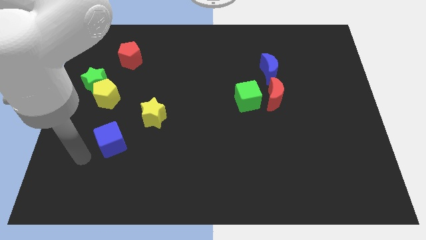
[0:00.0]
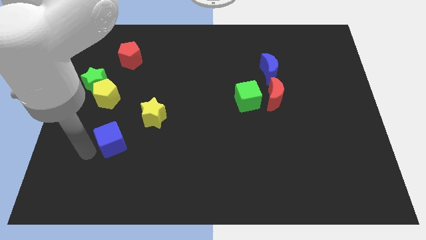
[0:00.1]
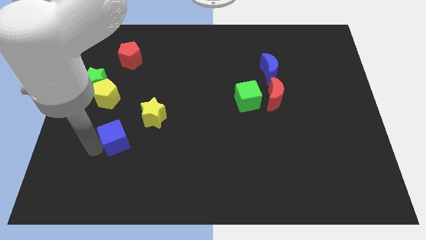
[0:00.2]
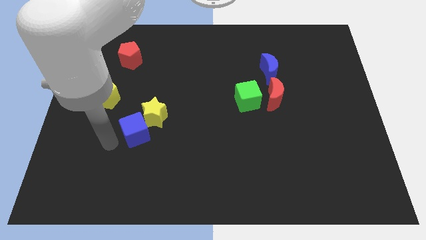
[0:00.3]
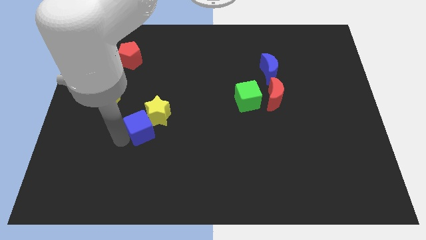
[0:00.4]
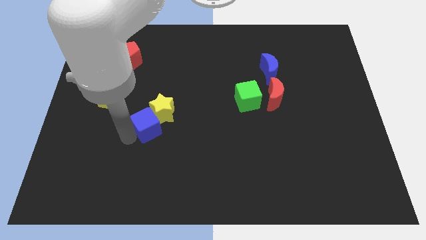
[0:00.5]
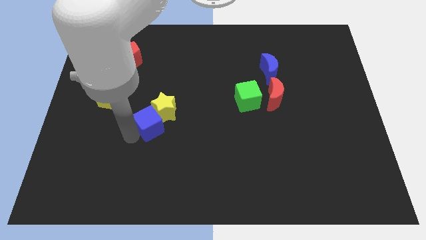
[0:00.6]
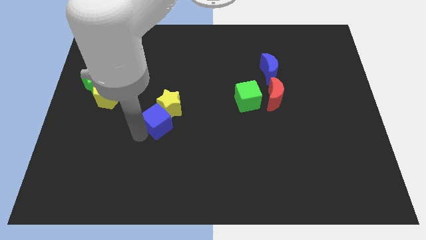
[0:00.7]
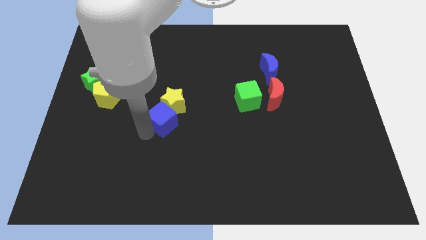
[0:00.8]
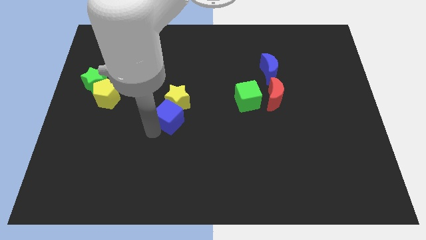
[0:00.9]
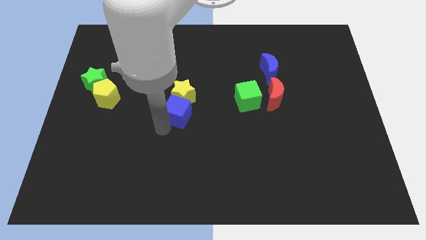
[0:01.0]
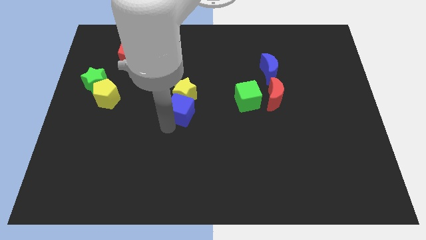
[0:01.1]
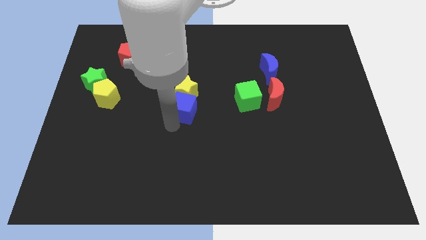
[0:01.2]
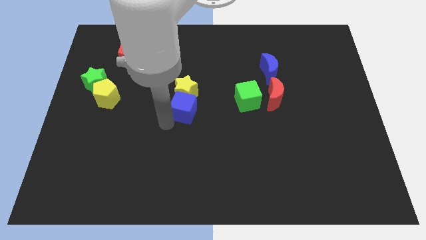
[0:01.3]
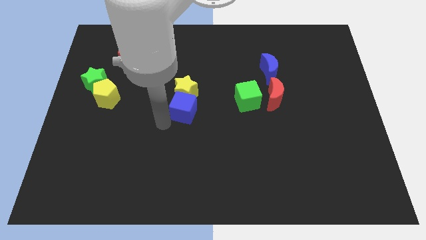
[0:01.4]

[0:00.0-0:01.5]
move the blue cube along with the yellow star to the left of the green cube

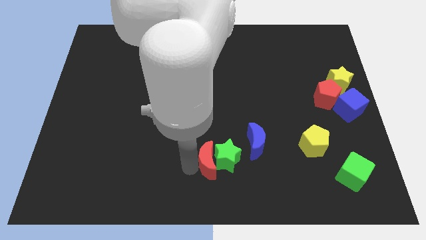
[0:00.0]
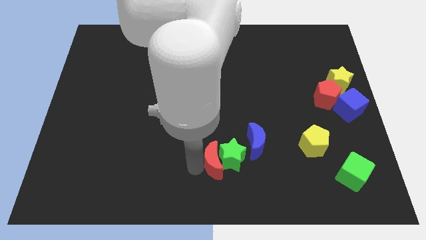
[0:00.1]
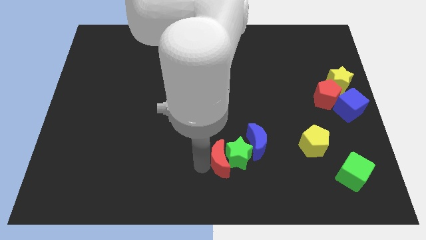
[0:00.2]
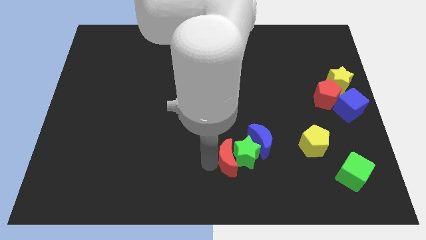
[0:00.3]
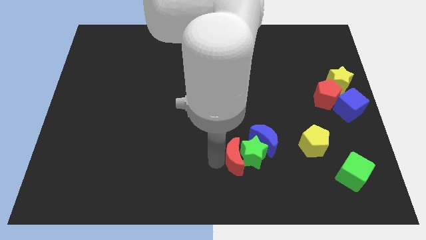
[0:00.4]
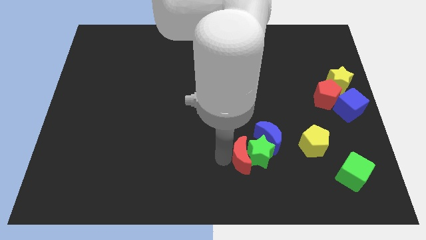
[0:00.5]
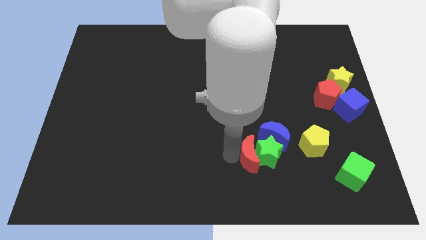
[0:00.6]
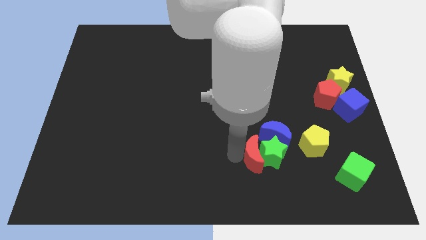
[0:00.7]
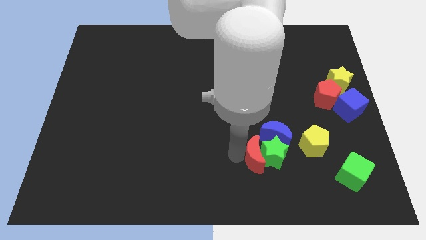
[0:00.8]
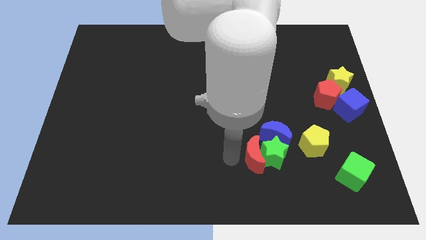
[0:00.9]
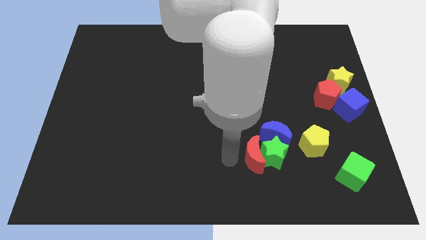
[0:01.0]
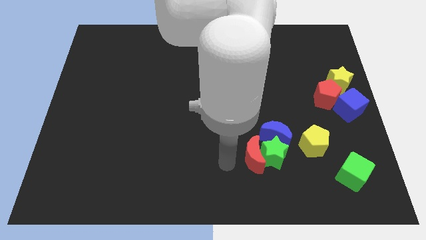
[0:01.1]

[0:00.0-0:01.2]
push the blue crescent and green star with the red crescent slightly to the left of the yellow pentagon

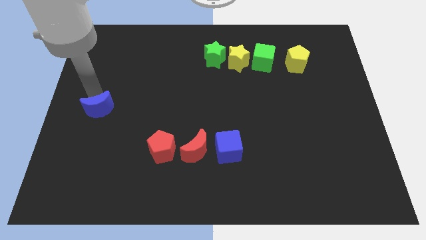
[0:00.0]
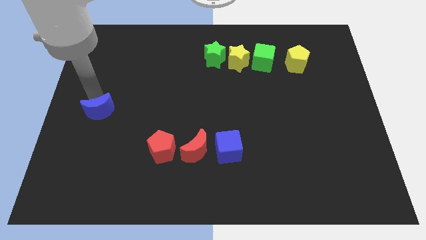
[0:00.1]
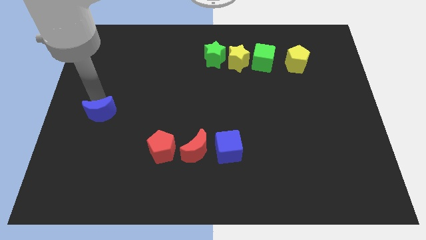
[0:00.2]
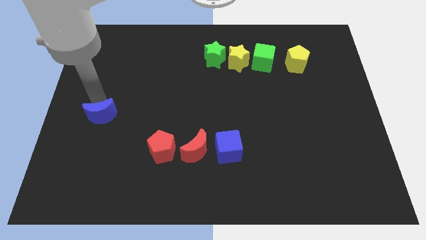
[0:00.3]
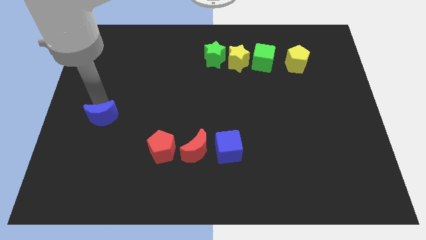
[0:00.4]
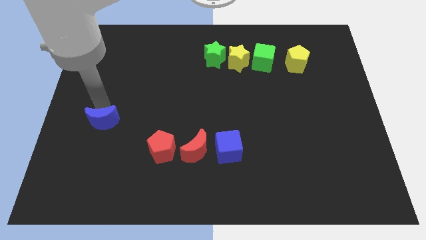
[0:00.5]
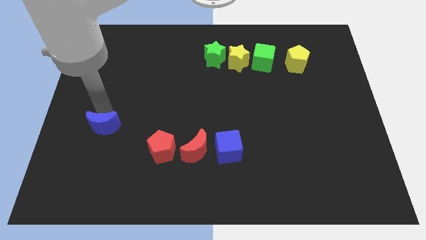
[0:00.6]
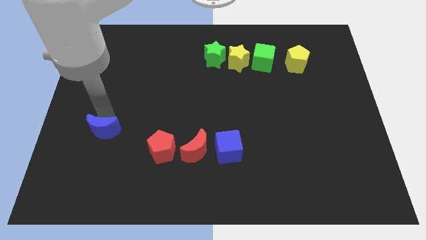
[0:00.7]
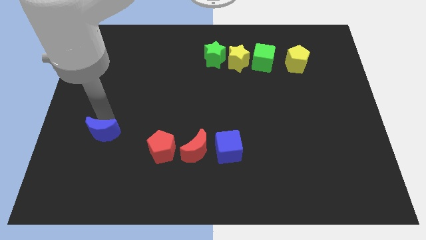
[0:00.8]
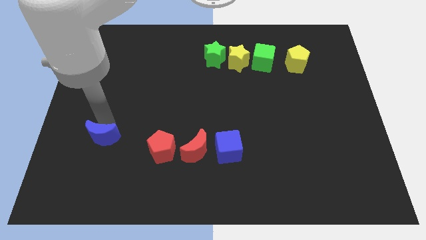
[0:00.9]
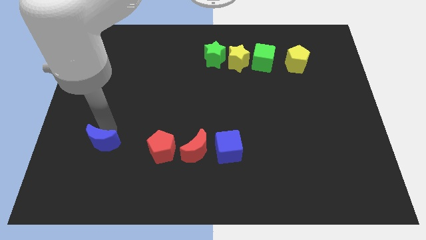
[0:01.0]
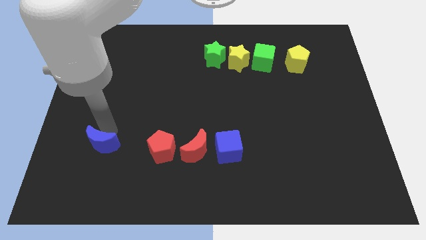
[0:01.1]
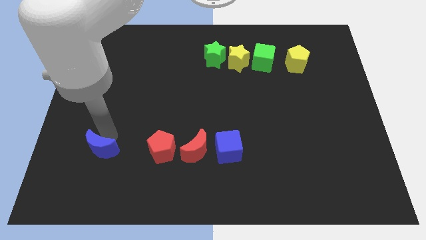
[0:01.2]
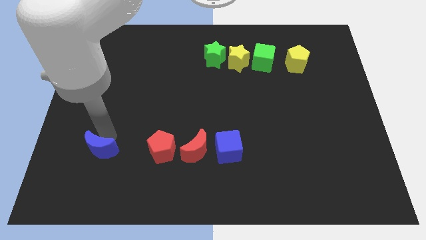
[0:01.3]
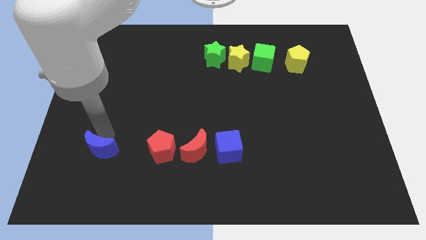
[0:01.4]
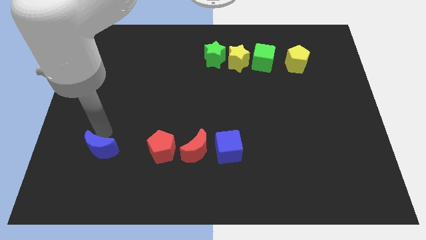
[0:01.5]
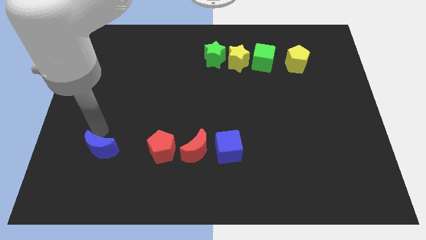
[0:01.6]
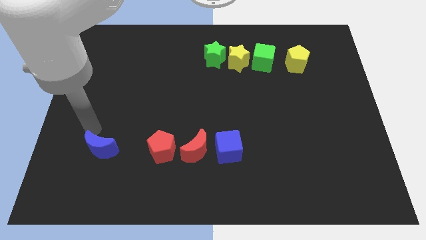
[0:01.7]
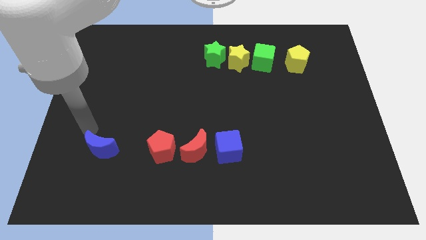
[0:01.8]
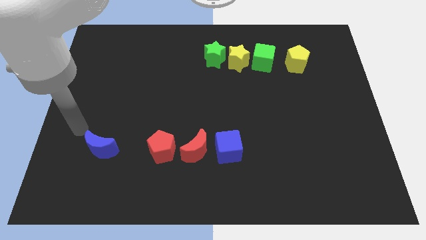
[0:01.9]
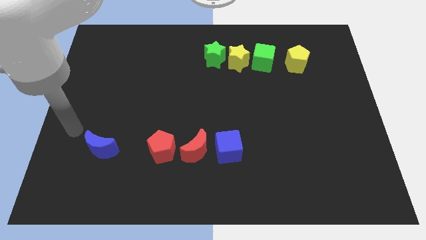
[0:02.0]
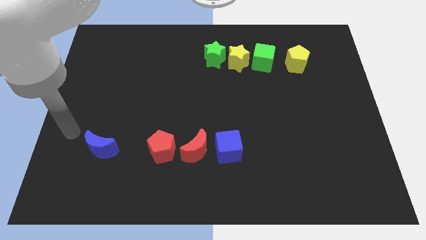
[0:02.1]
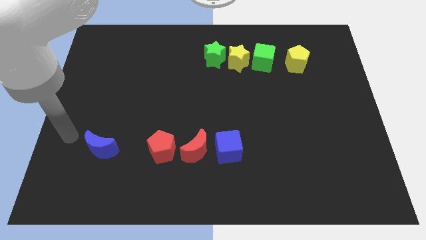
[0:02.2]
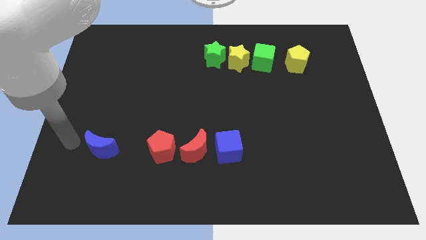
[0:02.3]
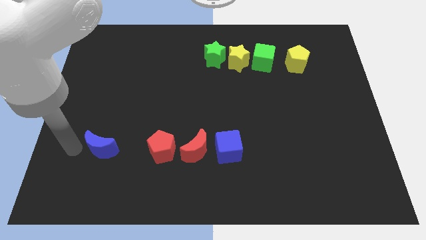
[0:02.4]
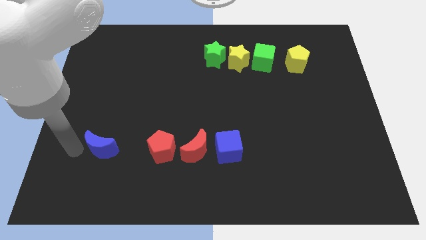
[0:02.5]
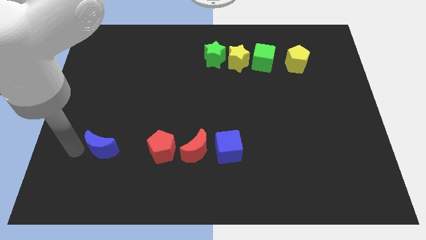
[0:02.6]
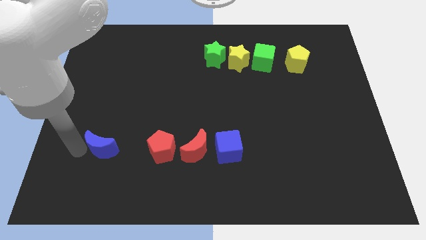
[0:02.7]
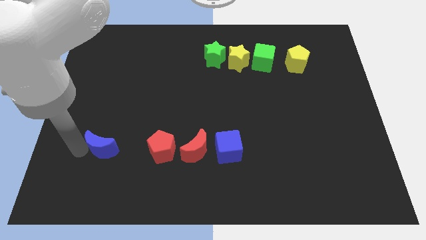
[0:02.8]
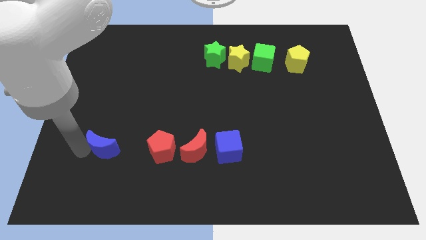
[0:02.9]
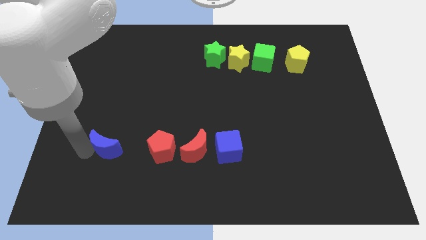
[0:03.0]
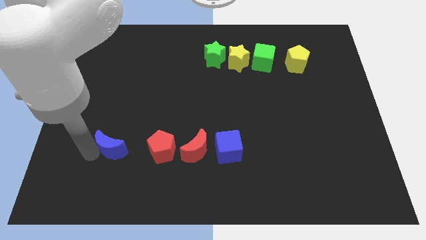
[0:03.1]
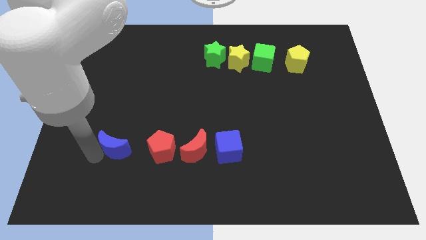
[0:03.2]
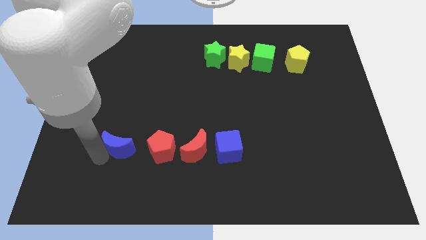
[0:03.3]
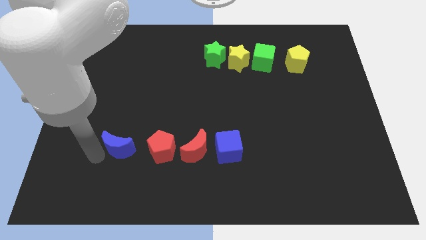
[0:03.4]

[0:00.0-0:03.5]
move the blue moon close to the left side of the red pentagon

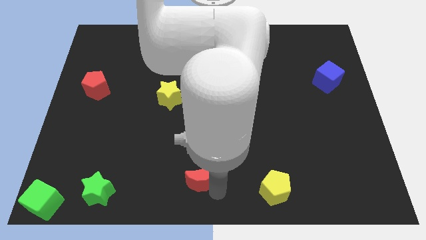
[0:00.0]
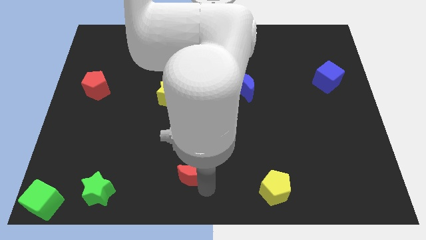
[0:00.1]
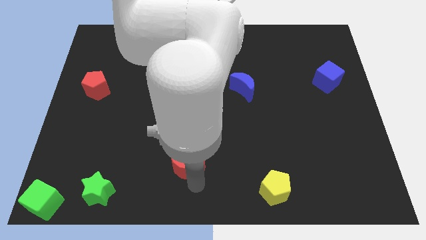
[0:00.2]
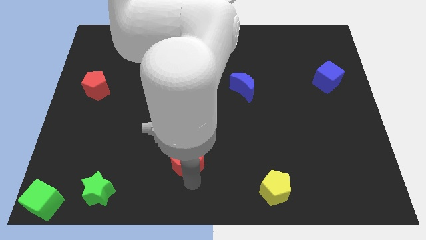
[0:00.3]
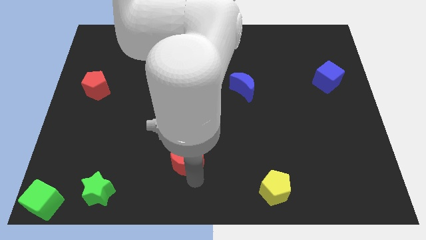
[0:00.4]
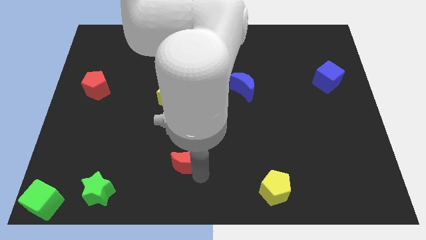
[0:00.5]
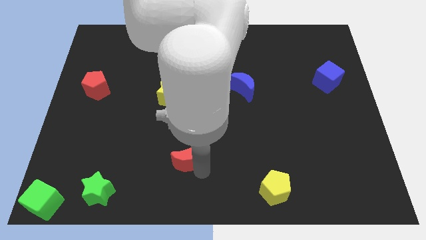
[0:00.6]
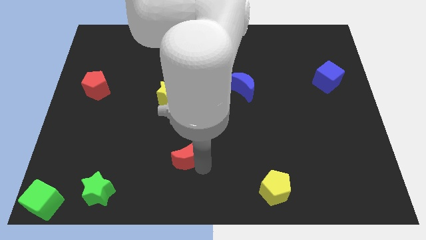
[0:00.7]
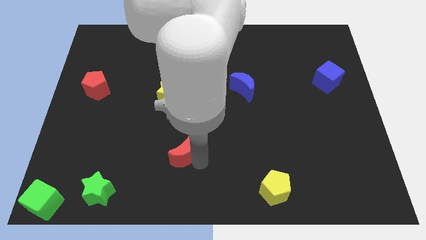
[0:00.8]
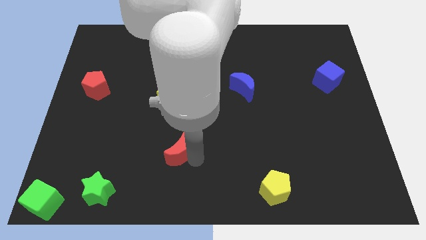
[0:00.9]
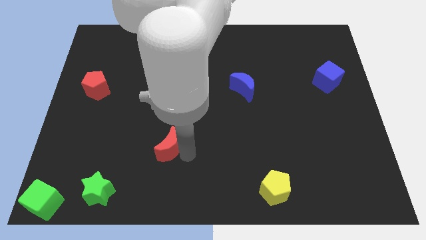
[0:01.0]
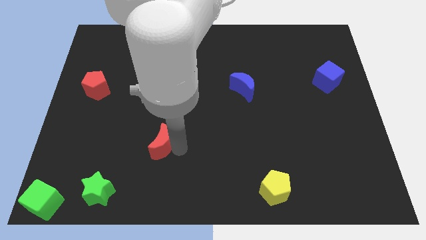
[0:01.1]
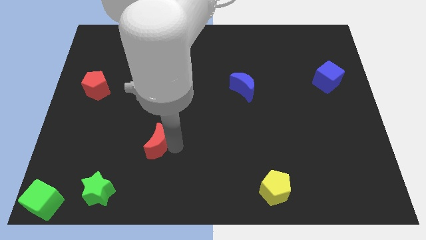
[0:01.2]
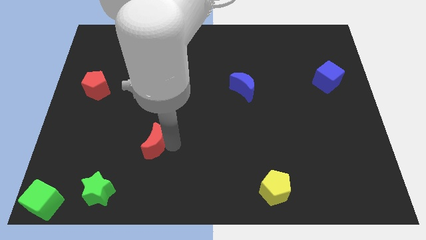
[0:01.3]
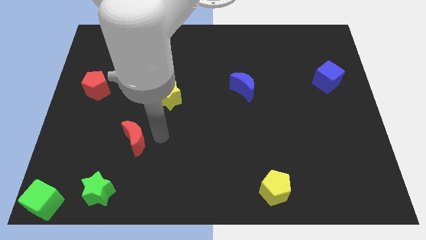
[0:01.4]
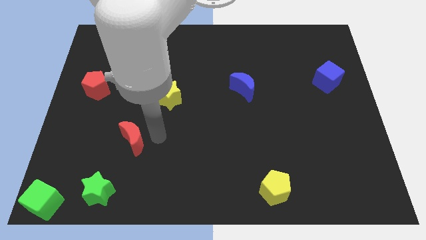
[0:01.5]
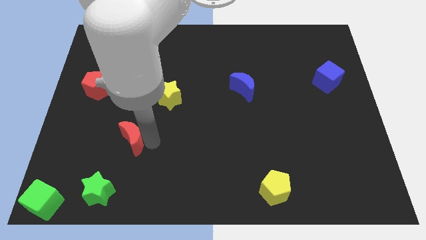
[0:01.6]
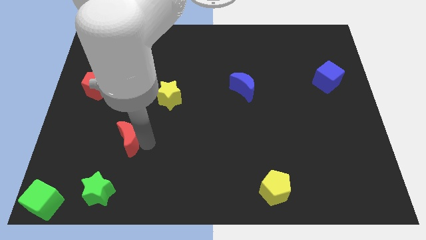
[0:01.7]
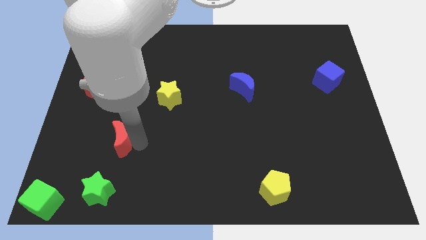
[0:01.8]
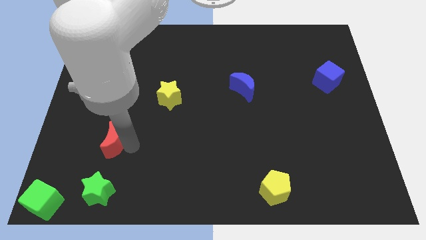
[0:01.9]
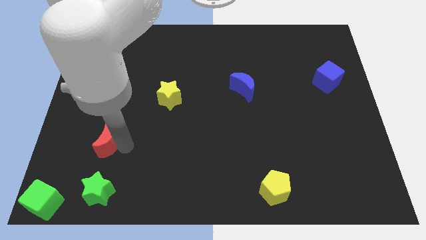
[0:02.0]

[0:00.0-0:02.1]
place the red moon above the green star

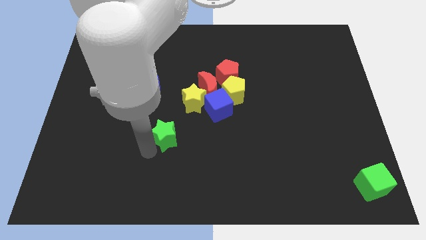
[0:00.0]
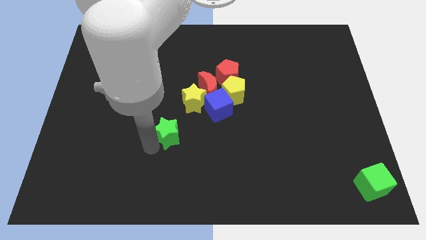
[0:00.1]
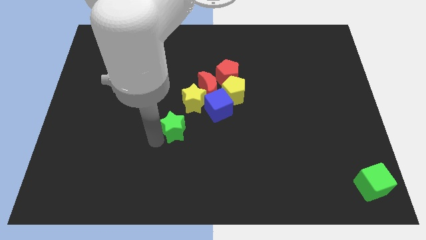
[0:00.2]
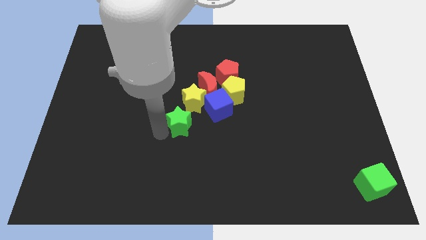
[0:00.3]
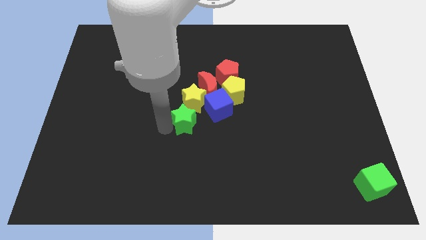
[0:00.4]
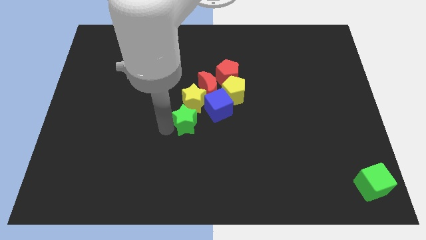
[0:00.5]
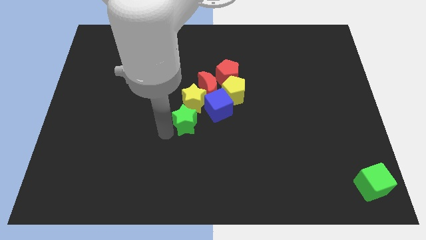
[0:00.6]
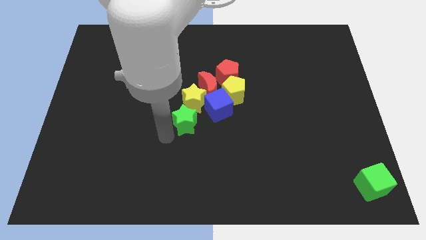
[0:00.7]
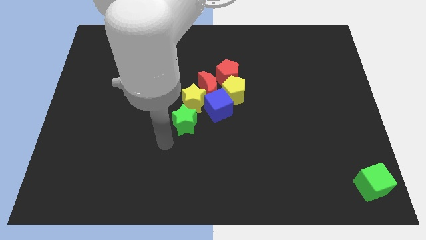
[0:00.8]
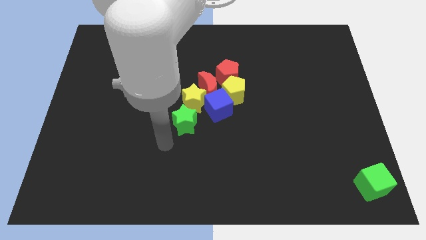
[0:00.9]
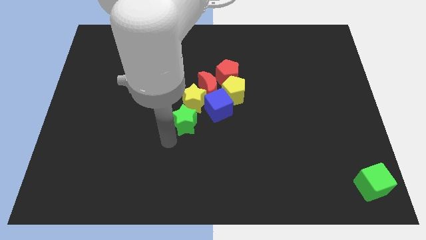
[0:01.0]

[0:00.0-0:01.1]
place the green star at the bottom left side of yellow star
